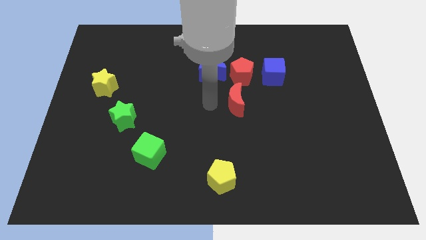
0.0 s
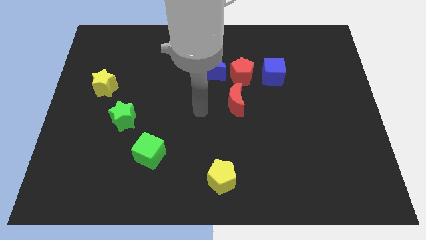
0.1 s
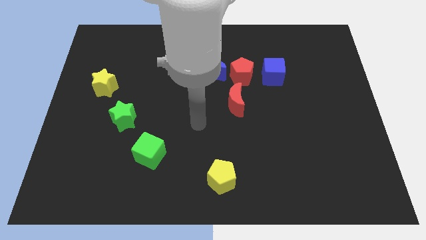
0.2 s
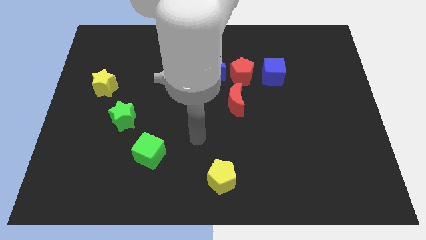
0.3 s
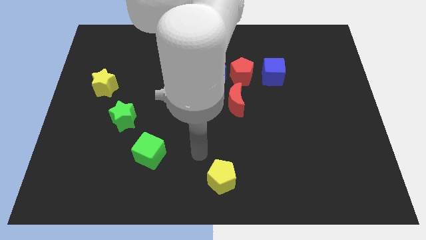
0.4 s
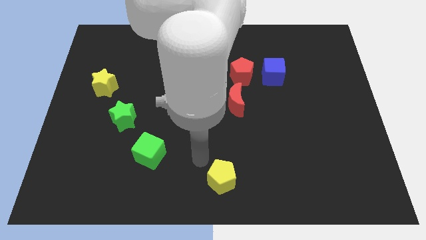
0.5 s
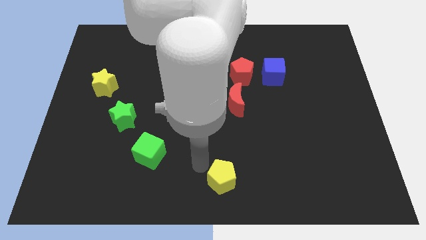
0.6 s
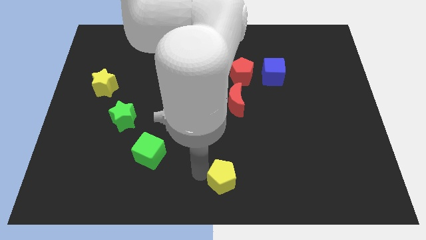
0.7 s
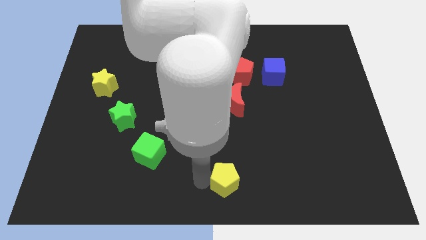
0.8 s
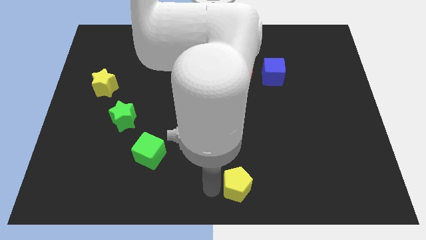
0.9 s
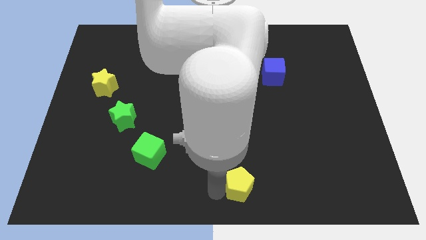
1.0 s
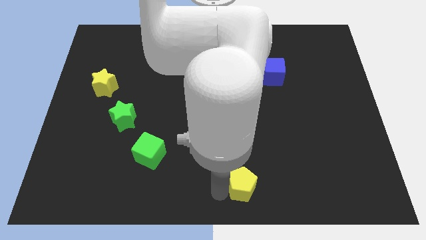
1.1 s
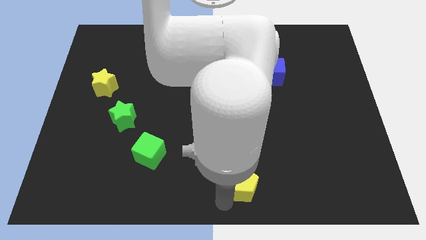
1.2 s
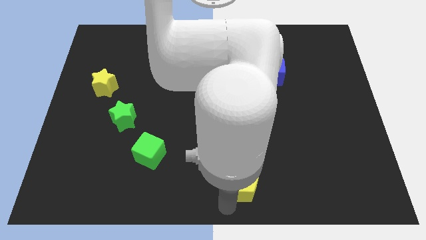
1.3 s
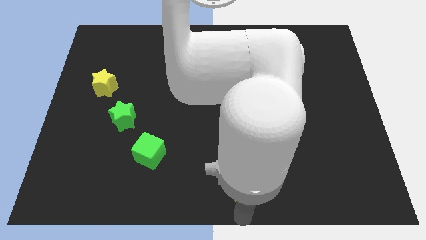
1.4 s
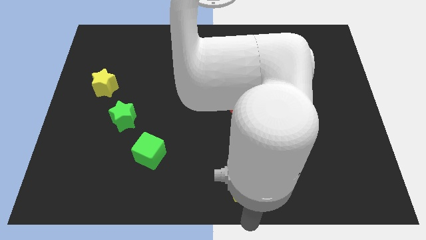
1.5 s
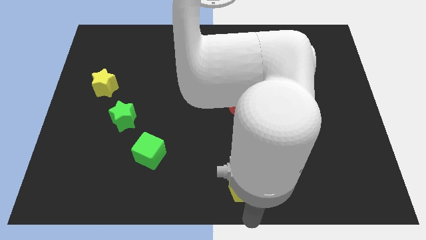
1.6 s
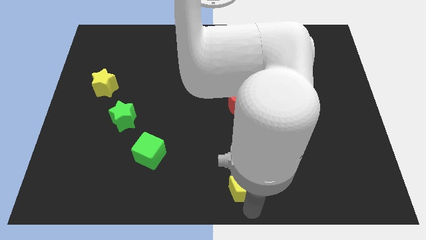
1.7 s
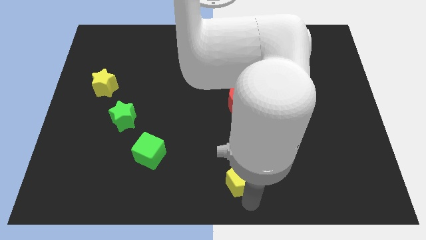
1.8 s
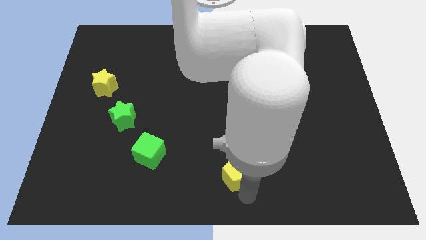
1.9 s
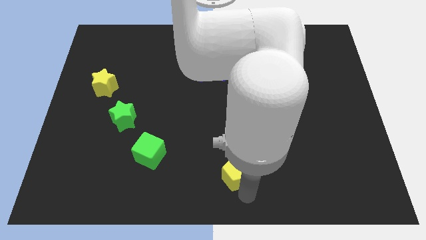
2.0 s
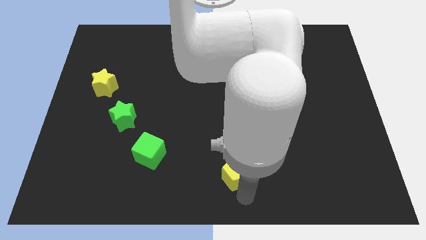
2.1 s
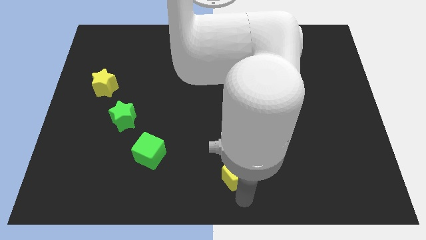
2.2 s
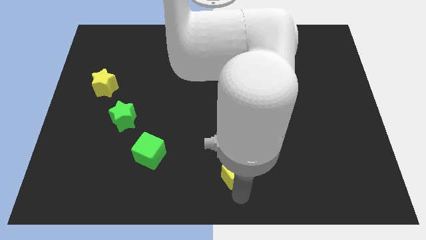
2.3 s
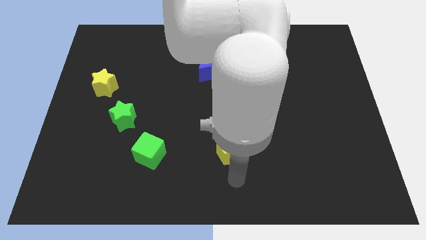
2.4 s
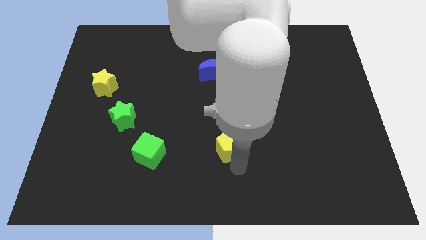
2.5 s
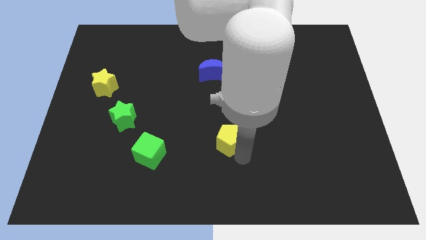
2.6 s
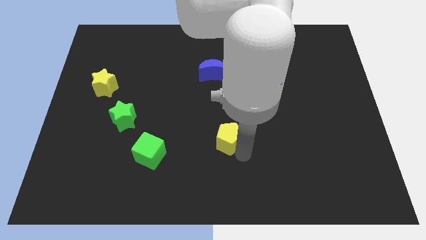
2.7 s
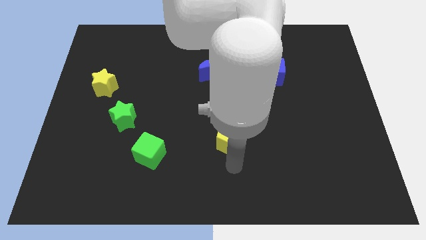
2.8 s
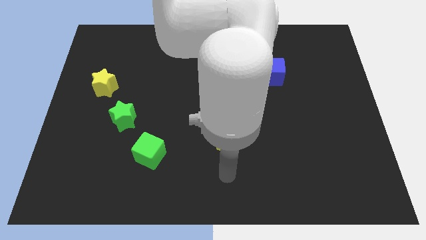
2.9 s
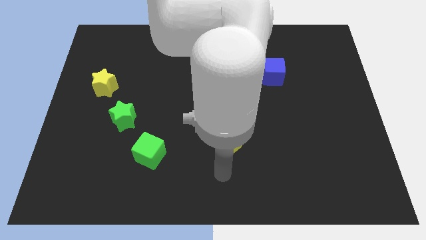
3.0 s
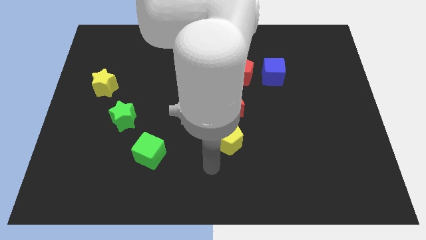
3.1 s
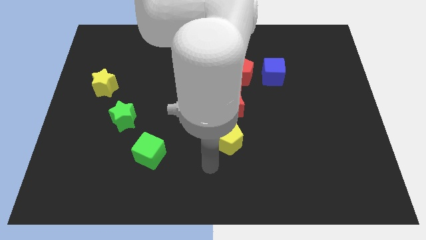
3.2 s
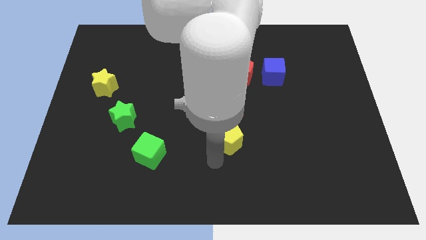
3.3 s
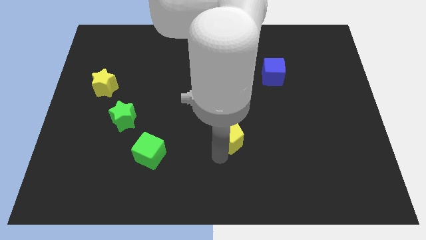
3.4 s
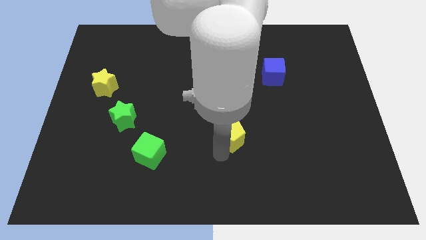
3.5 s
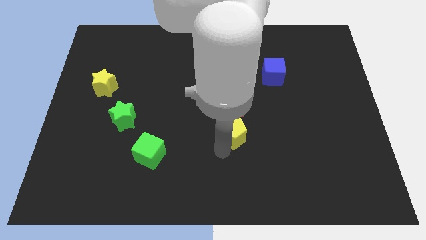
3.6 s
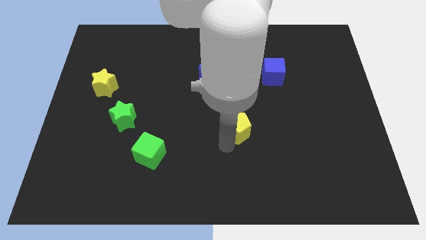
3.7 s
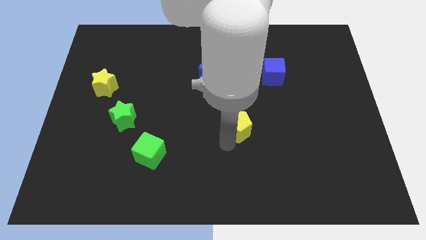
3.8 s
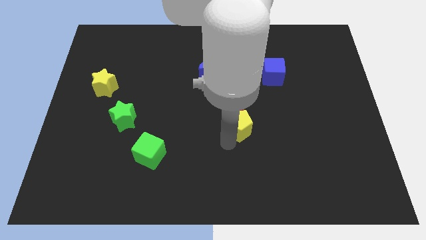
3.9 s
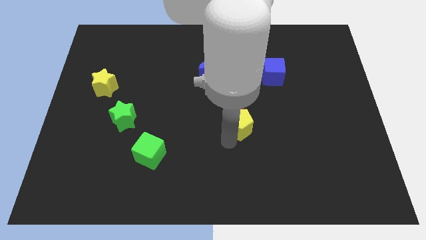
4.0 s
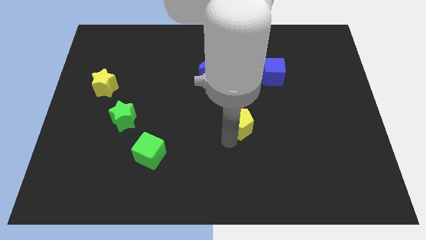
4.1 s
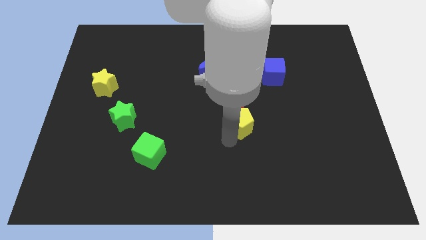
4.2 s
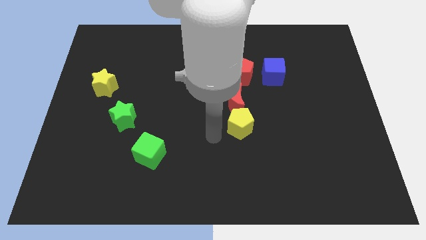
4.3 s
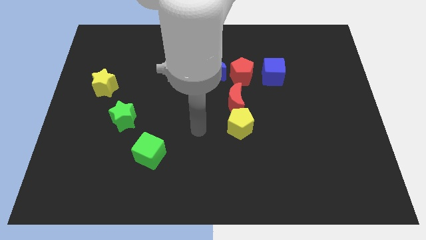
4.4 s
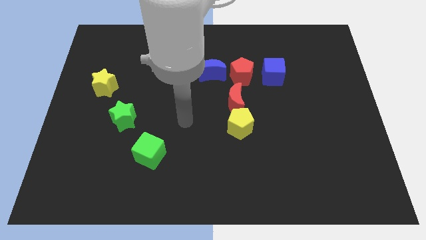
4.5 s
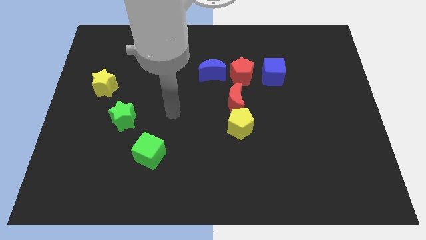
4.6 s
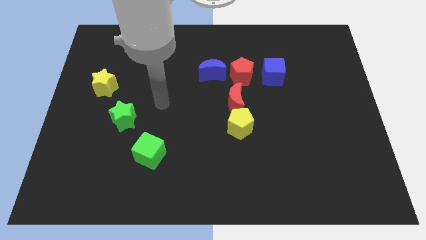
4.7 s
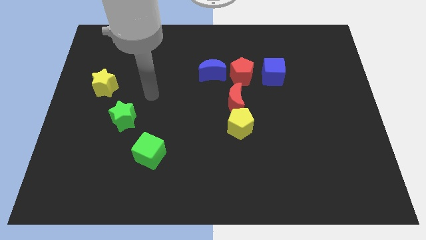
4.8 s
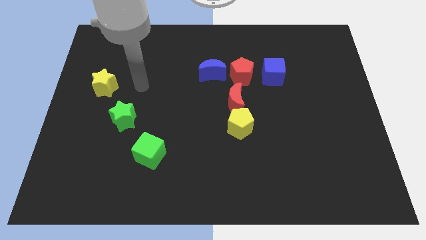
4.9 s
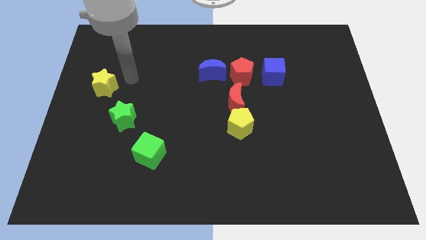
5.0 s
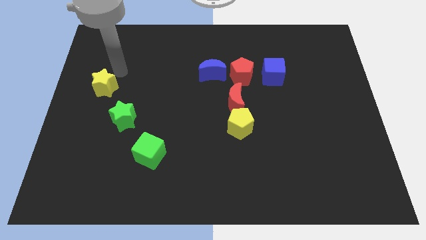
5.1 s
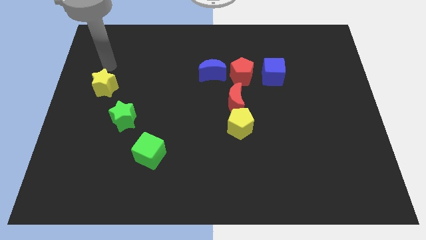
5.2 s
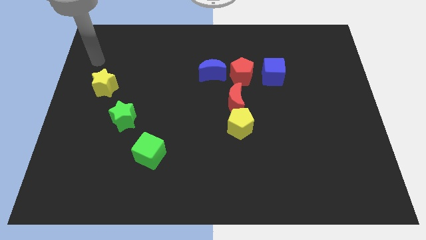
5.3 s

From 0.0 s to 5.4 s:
push the yellow pentagon into the red crescent

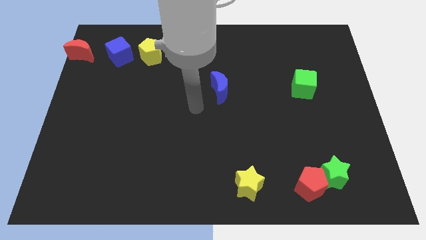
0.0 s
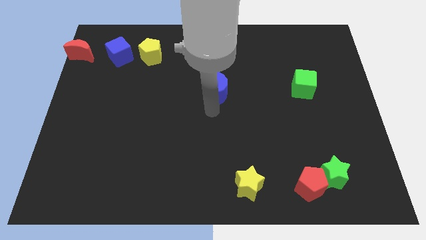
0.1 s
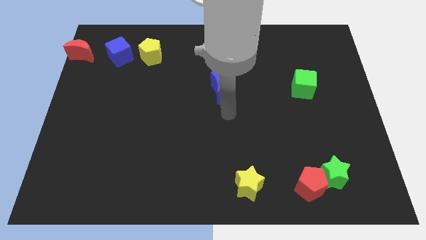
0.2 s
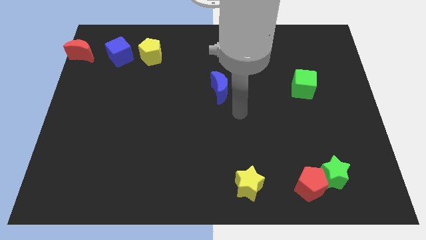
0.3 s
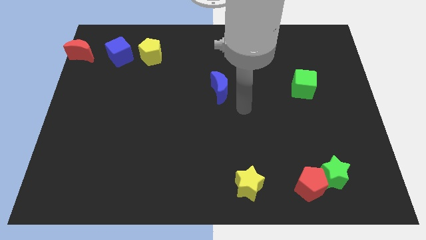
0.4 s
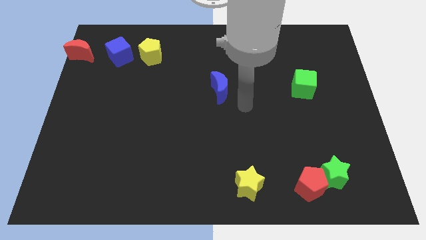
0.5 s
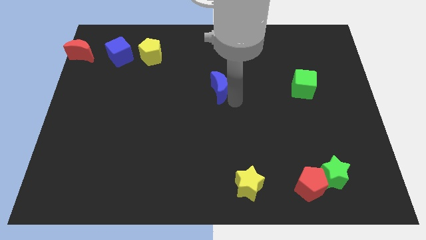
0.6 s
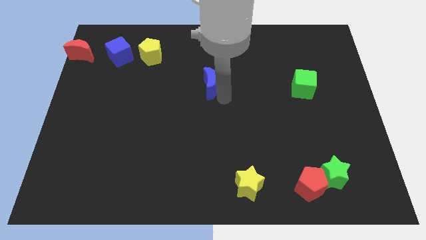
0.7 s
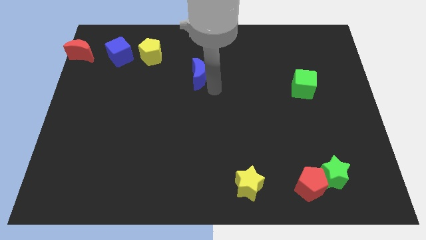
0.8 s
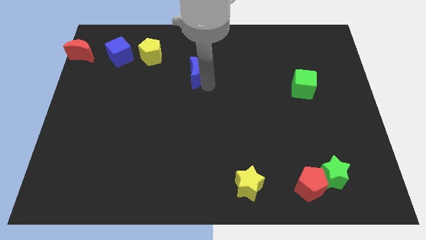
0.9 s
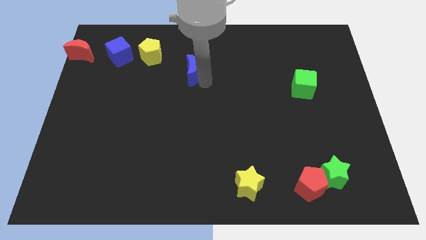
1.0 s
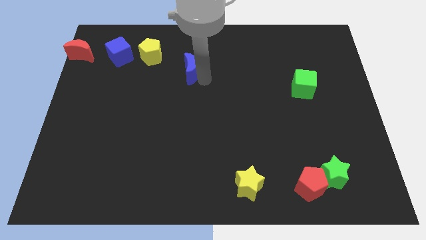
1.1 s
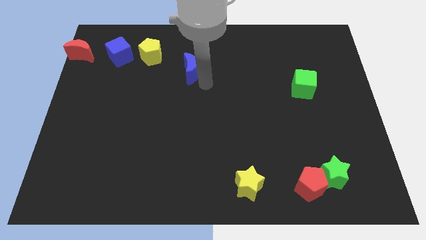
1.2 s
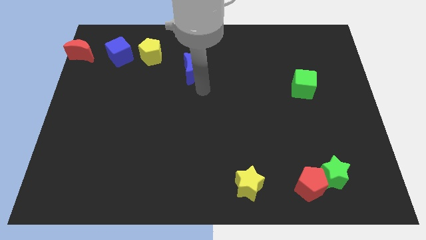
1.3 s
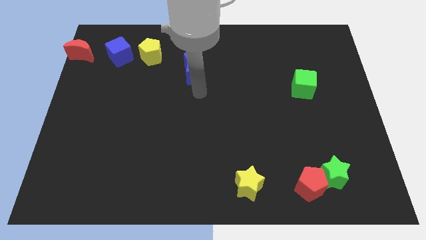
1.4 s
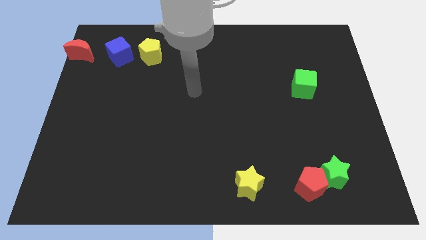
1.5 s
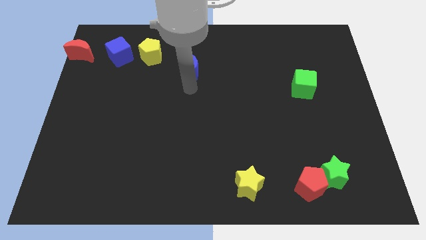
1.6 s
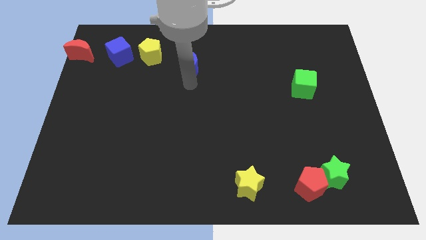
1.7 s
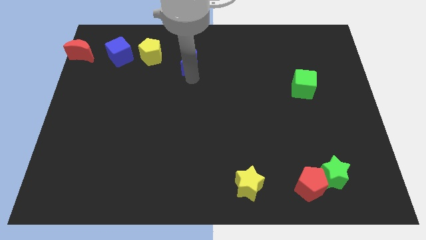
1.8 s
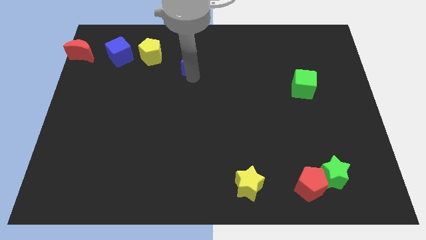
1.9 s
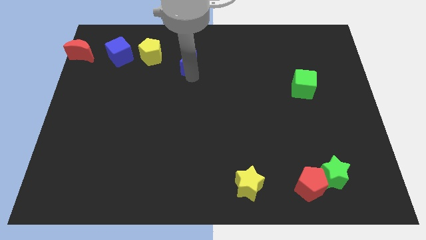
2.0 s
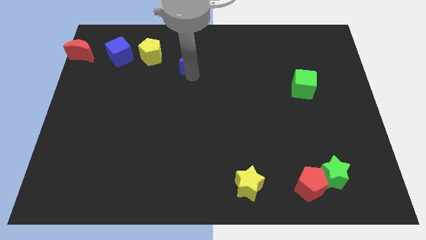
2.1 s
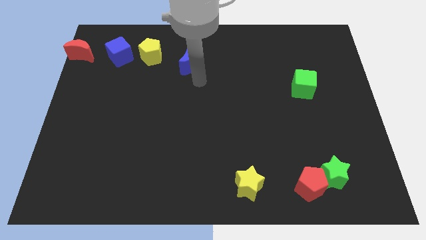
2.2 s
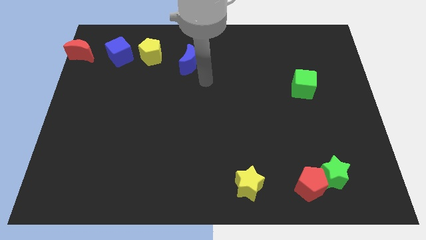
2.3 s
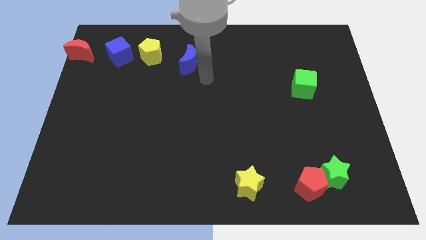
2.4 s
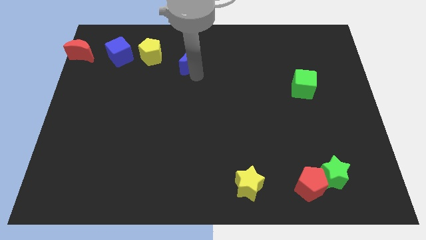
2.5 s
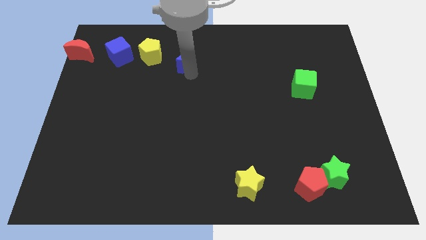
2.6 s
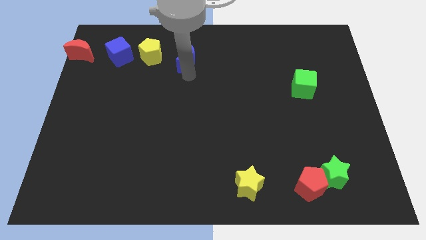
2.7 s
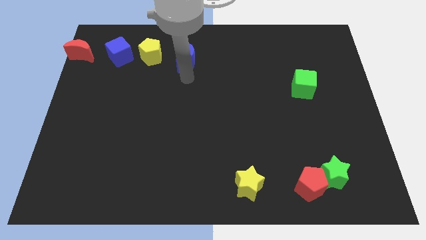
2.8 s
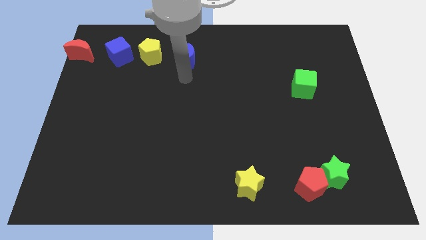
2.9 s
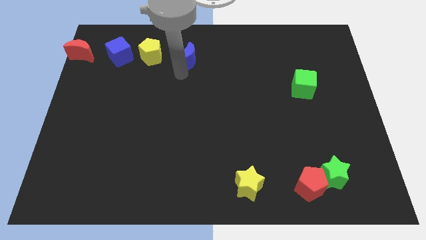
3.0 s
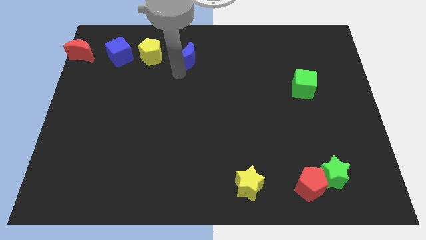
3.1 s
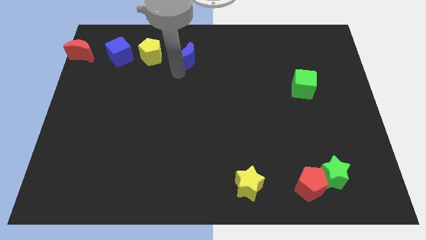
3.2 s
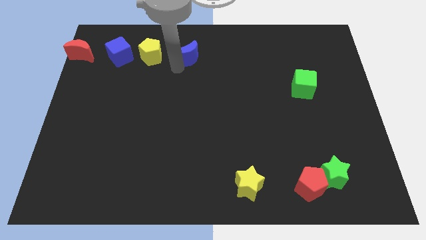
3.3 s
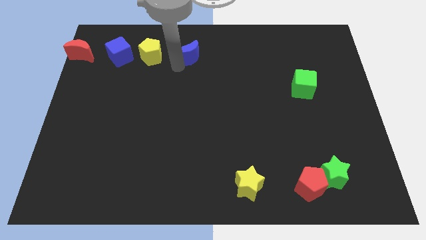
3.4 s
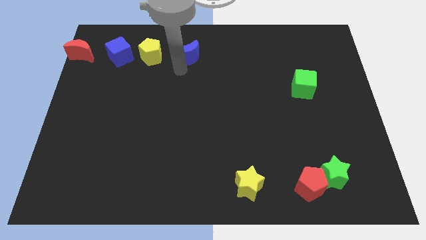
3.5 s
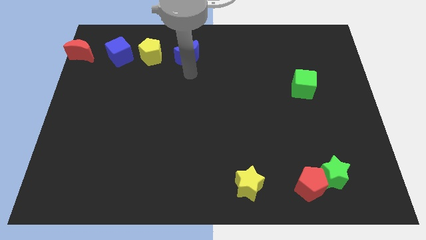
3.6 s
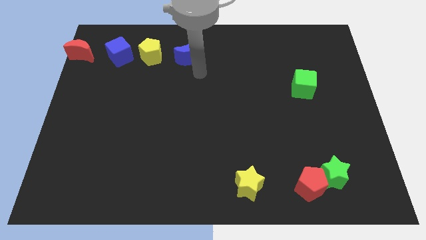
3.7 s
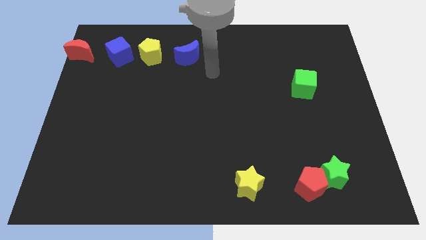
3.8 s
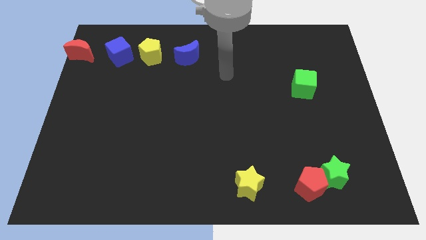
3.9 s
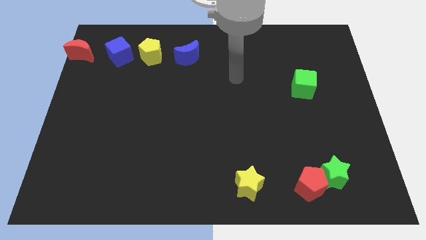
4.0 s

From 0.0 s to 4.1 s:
place the blue crescent to the right side of the yellow pentagon
